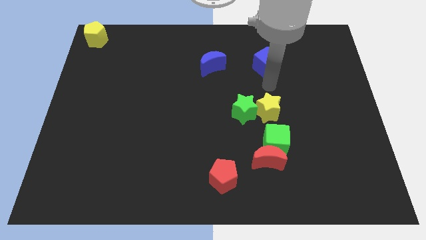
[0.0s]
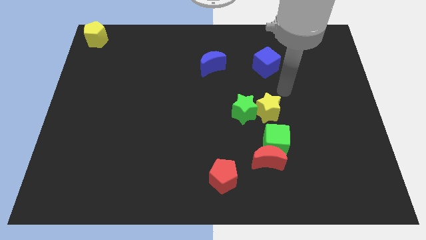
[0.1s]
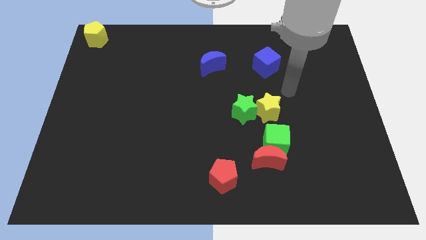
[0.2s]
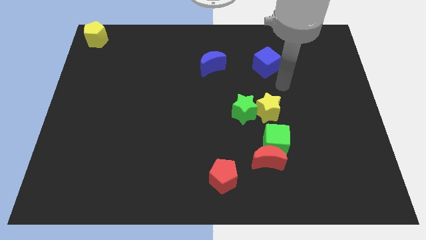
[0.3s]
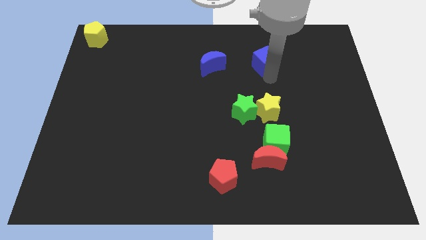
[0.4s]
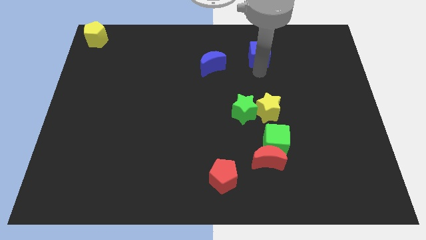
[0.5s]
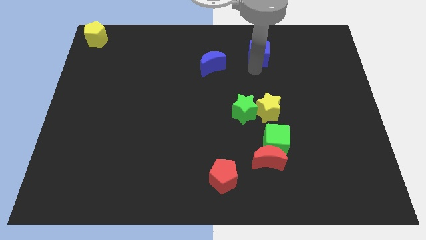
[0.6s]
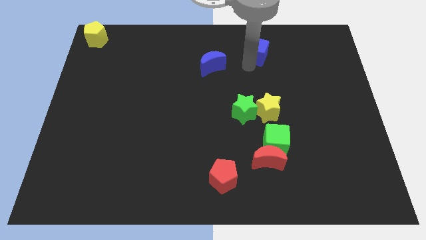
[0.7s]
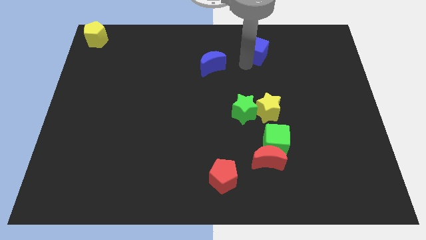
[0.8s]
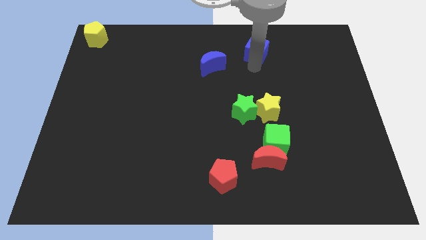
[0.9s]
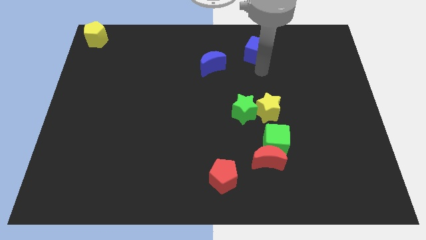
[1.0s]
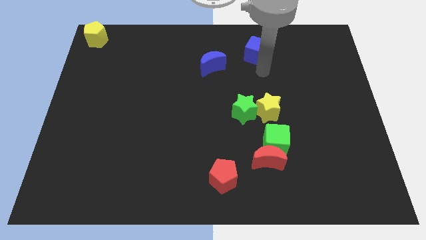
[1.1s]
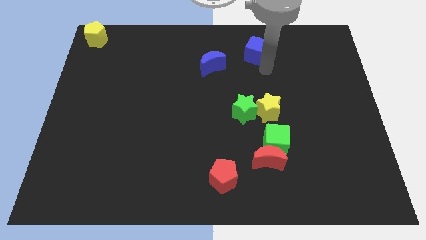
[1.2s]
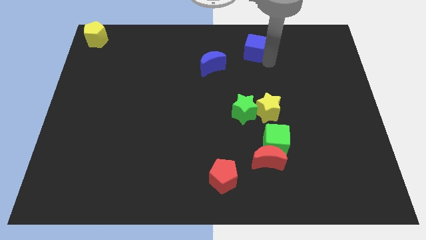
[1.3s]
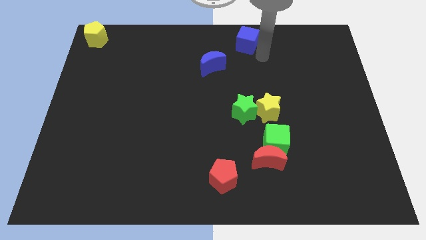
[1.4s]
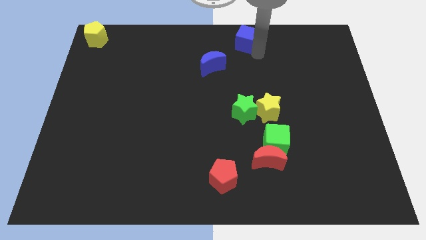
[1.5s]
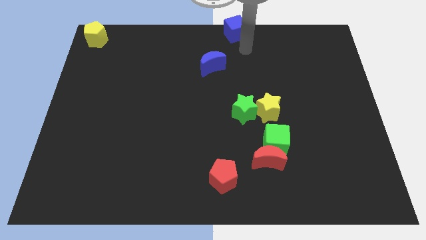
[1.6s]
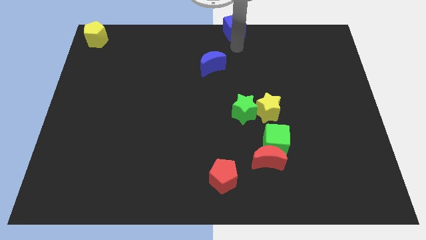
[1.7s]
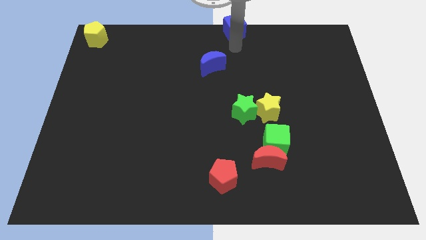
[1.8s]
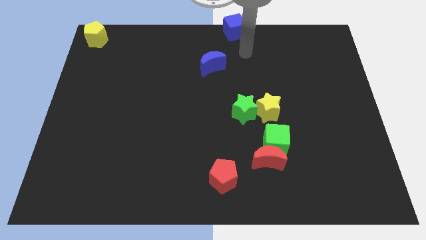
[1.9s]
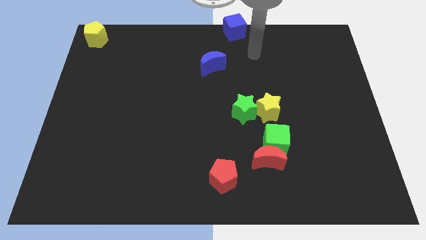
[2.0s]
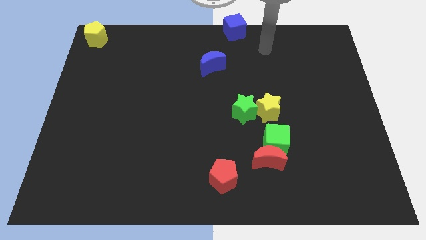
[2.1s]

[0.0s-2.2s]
place the blue cube at the top center of the board

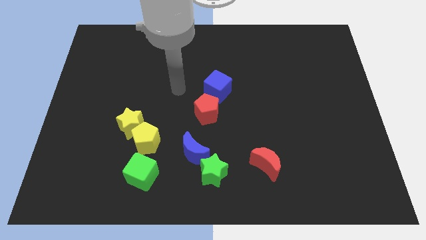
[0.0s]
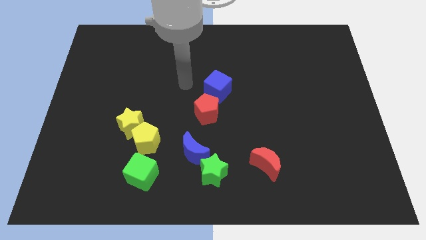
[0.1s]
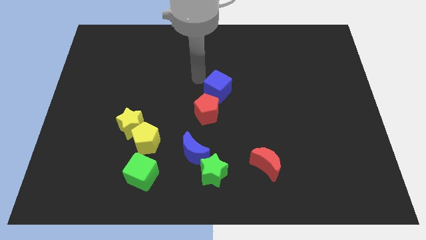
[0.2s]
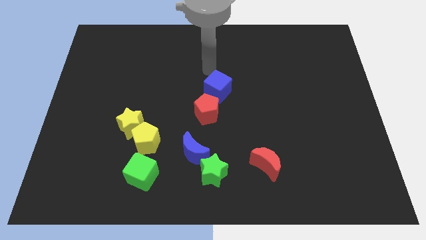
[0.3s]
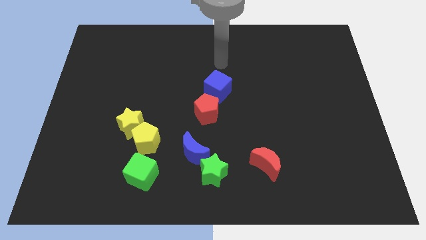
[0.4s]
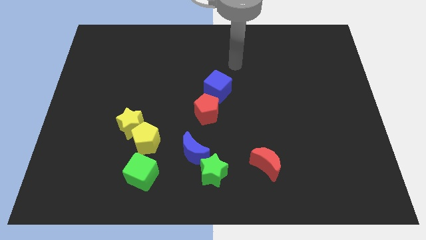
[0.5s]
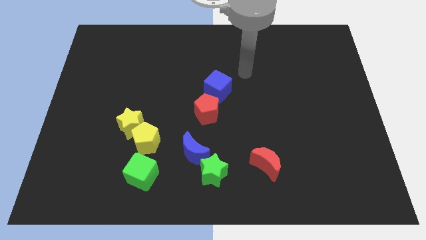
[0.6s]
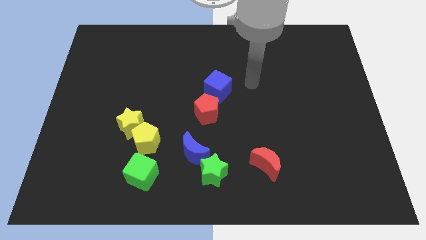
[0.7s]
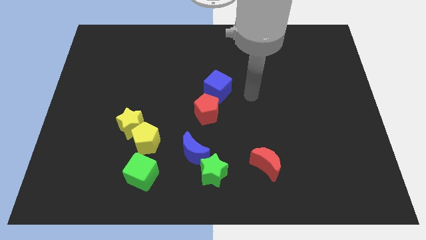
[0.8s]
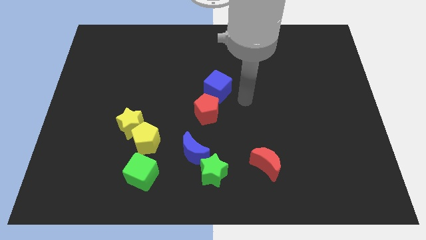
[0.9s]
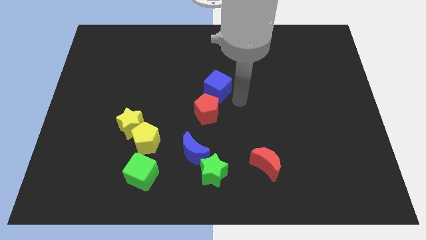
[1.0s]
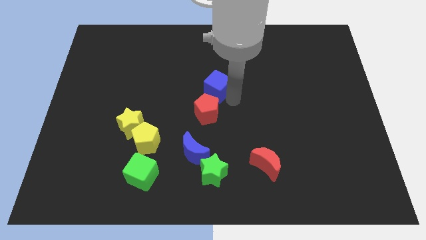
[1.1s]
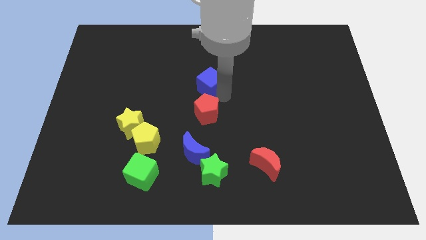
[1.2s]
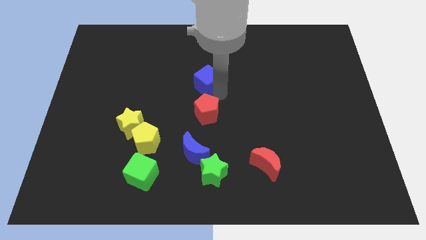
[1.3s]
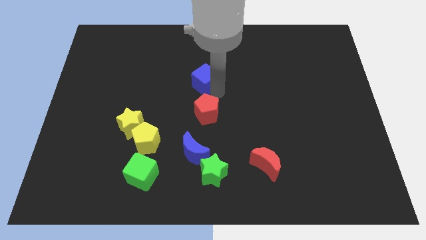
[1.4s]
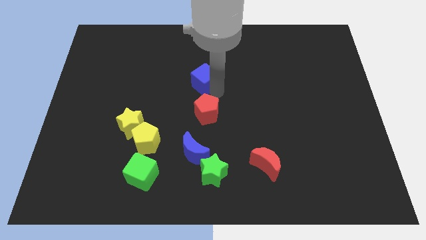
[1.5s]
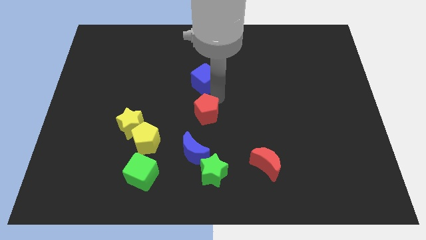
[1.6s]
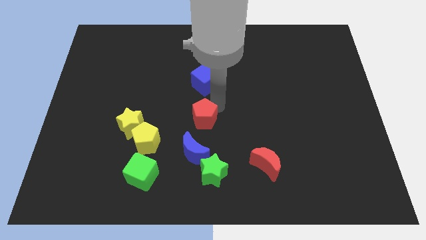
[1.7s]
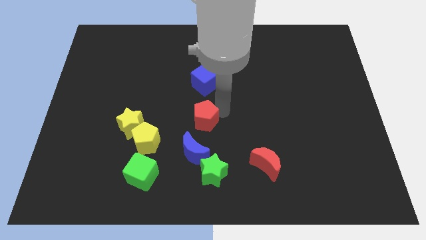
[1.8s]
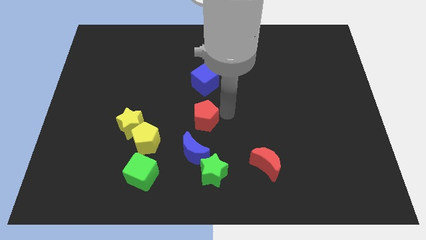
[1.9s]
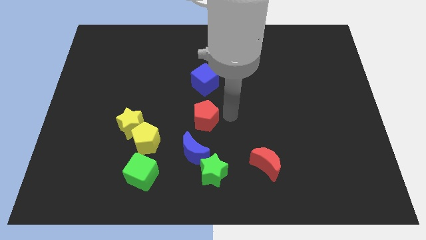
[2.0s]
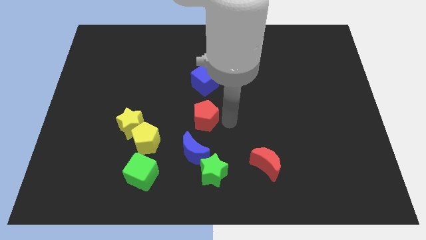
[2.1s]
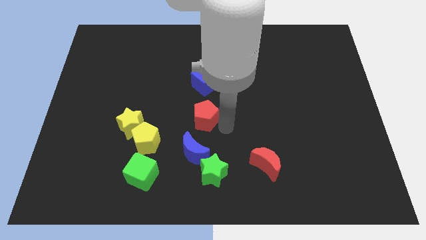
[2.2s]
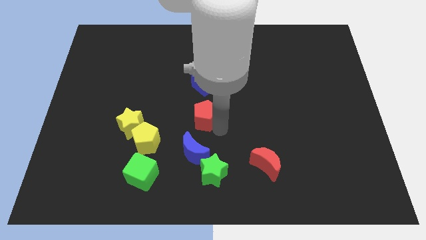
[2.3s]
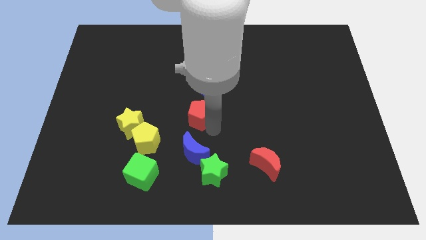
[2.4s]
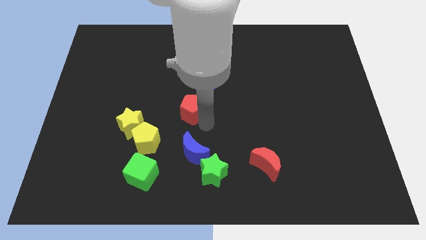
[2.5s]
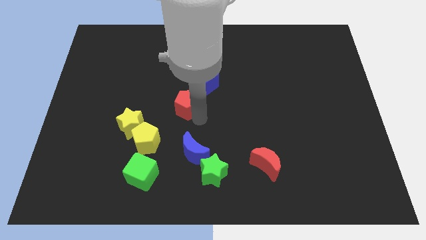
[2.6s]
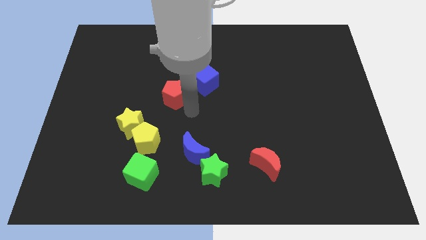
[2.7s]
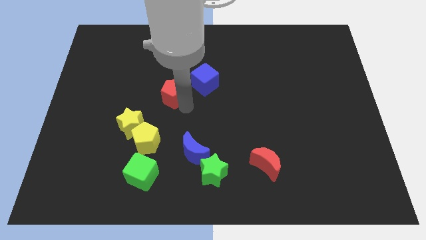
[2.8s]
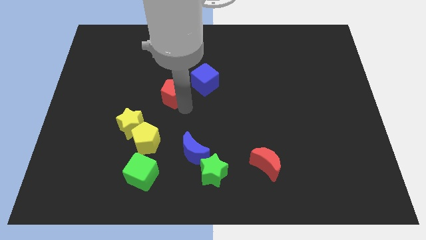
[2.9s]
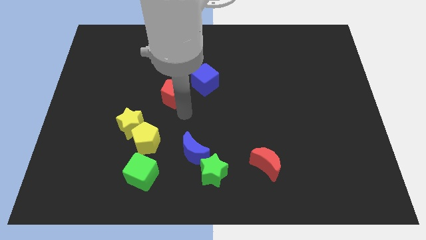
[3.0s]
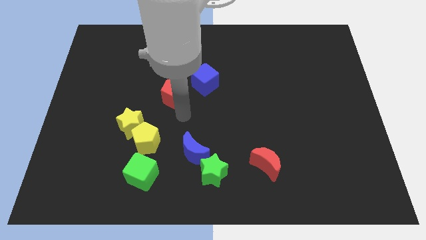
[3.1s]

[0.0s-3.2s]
put the red pentagon in between blue cube and yellow star

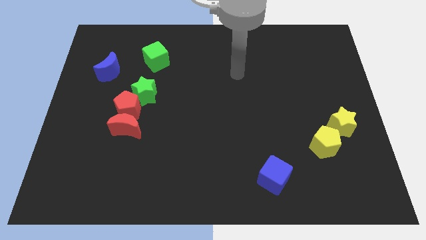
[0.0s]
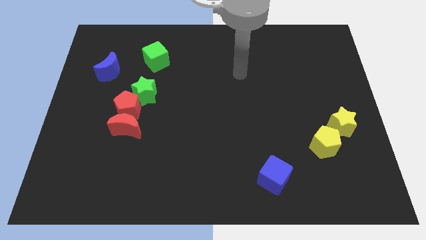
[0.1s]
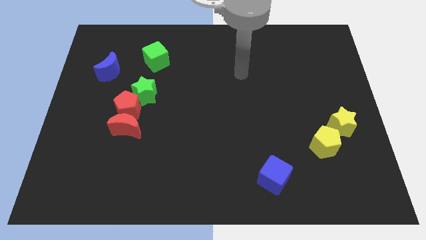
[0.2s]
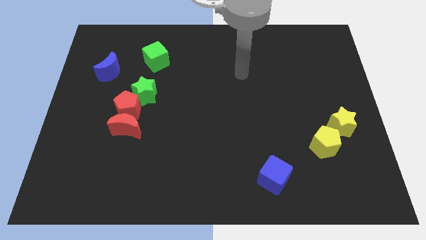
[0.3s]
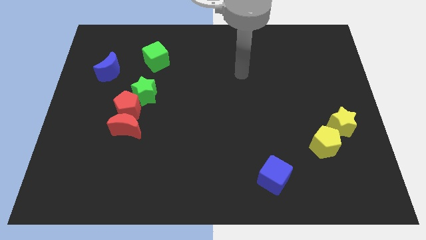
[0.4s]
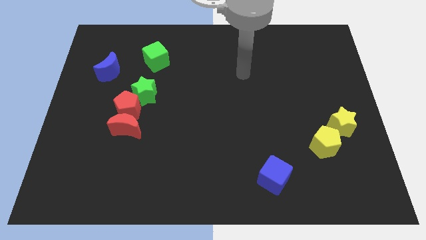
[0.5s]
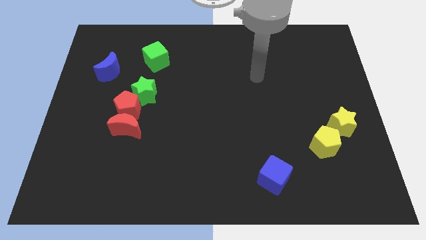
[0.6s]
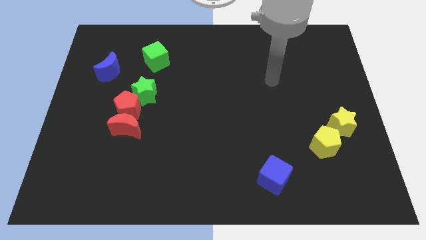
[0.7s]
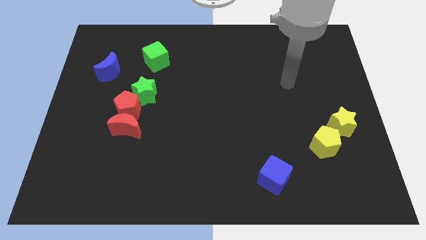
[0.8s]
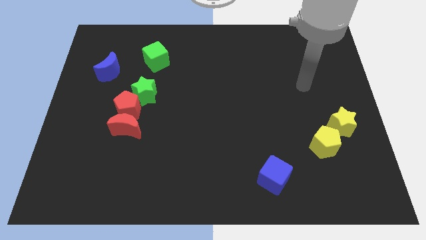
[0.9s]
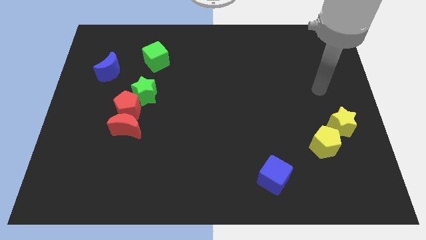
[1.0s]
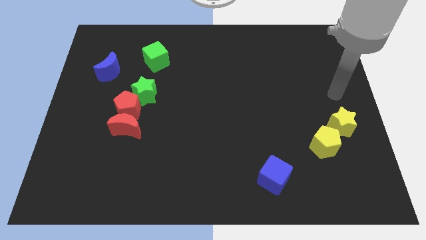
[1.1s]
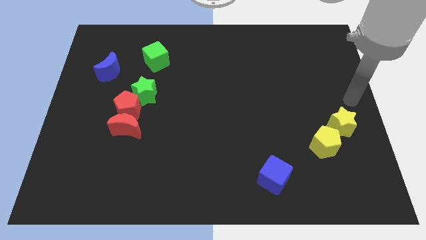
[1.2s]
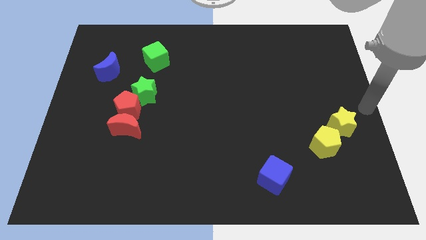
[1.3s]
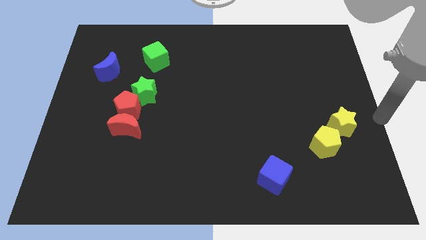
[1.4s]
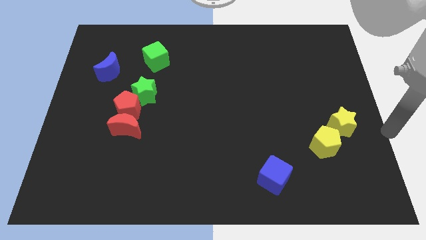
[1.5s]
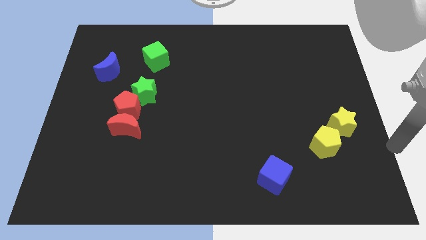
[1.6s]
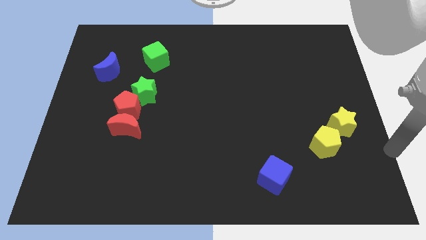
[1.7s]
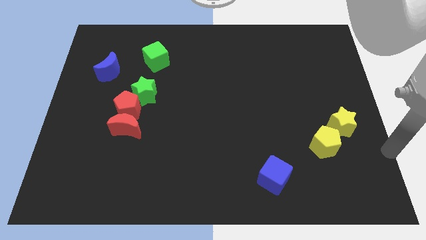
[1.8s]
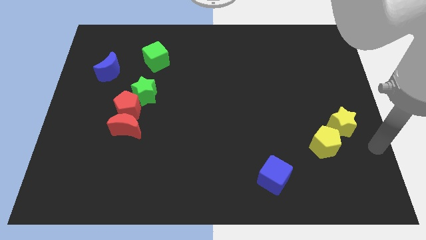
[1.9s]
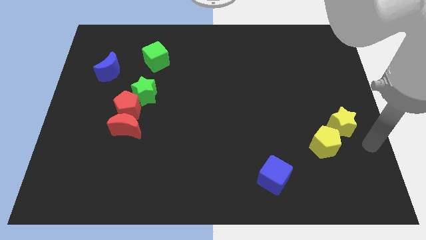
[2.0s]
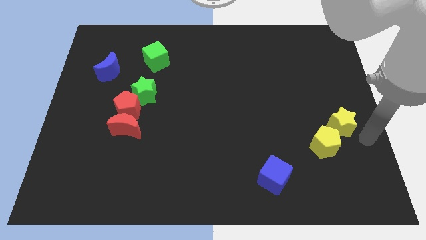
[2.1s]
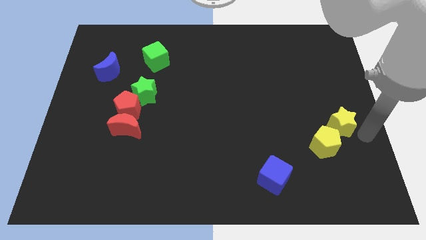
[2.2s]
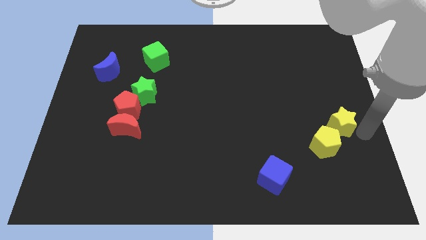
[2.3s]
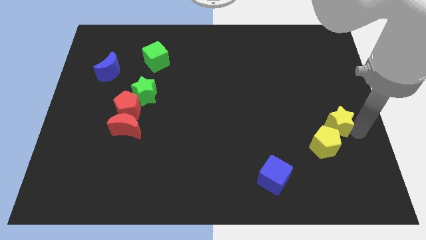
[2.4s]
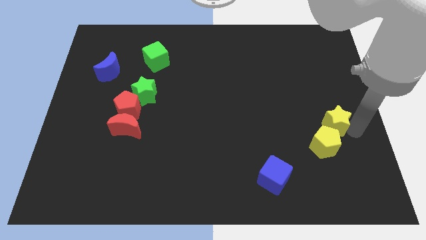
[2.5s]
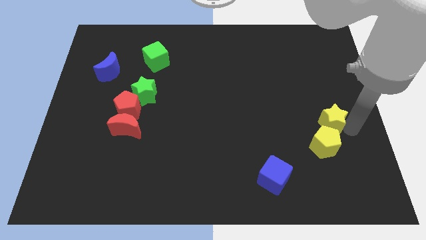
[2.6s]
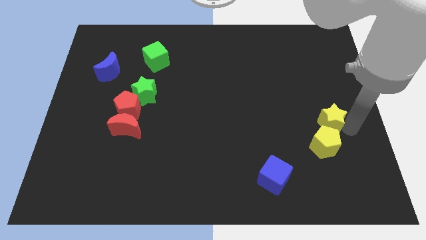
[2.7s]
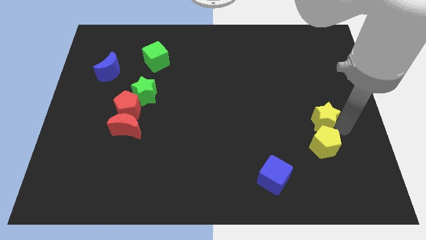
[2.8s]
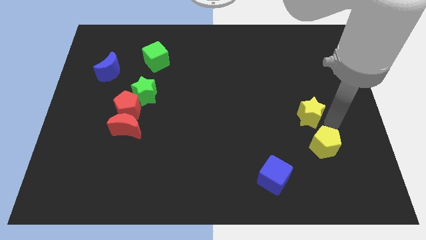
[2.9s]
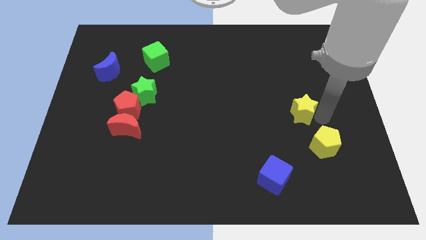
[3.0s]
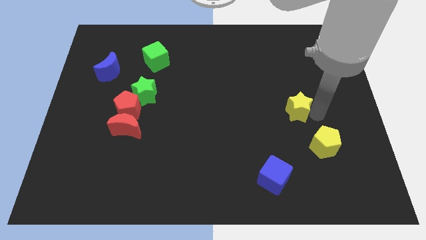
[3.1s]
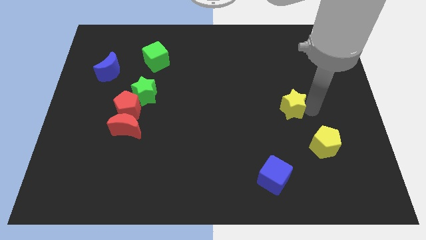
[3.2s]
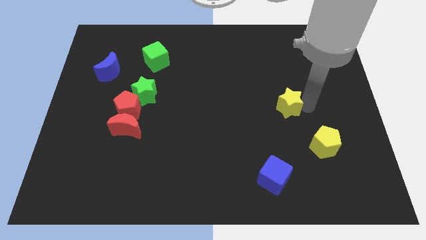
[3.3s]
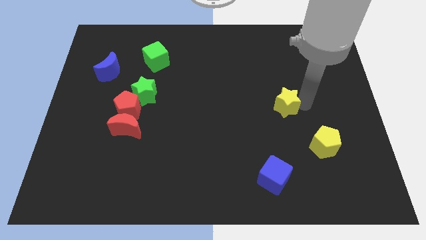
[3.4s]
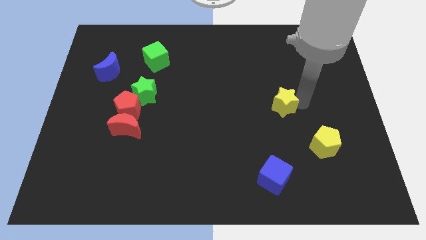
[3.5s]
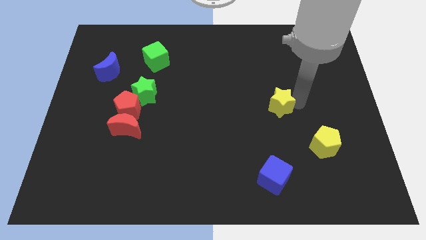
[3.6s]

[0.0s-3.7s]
separate the yellow star from yellow pentagon
